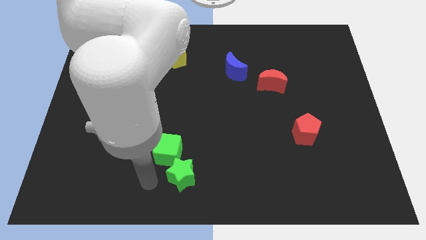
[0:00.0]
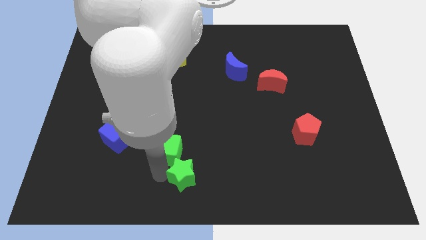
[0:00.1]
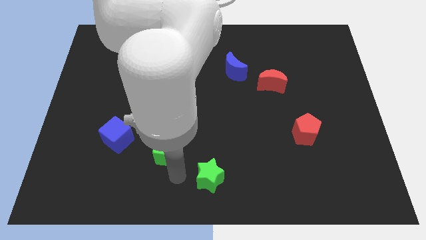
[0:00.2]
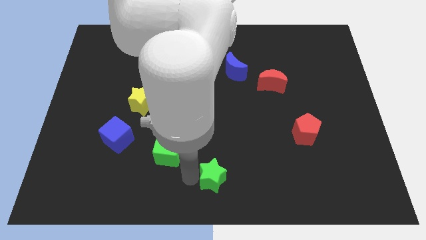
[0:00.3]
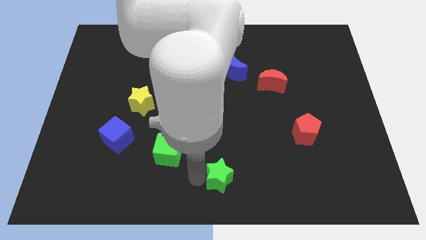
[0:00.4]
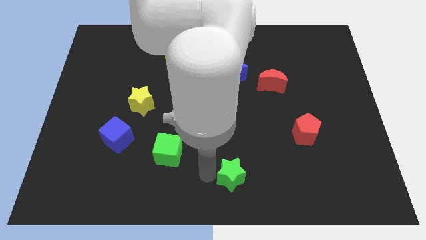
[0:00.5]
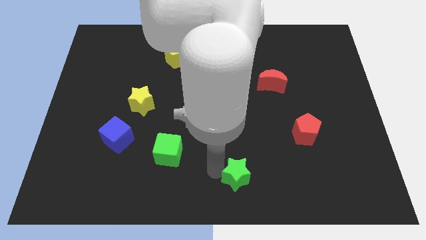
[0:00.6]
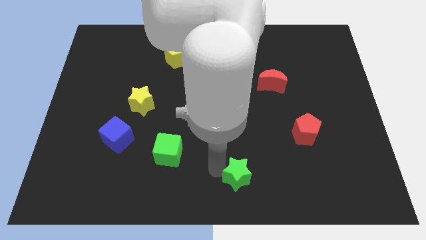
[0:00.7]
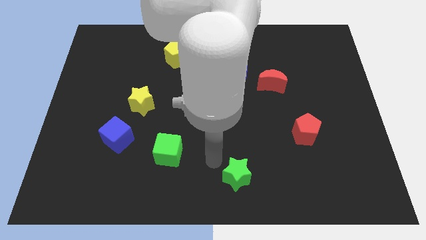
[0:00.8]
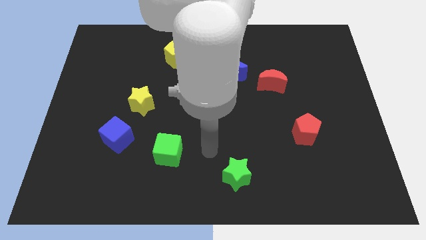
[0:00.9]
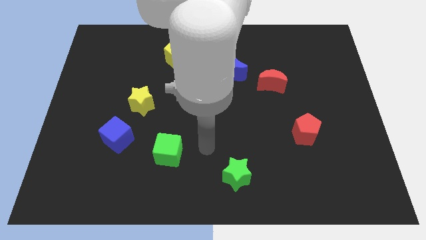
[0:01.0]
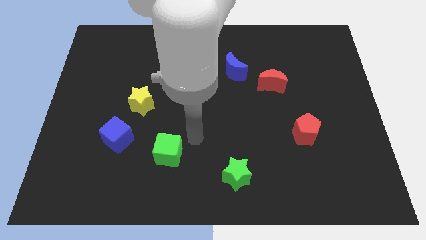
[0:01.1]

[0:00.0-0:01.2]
push the green star to the right of the board

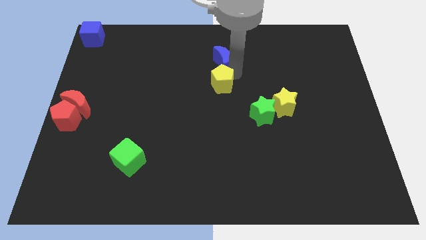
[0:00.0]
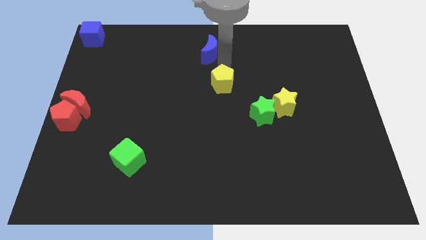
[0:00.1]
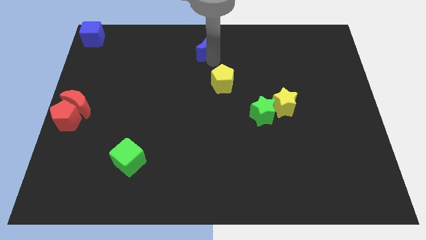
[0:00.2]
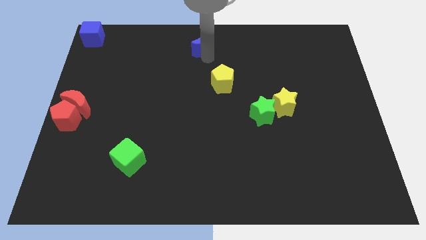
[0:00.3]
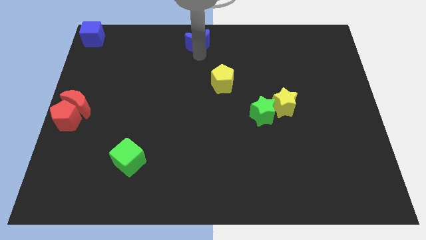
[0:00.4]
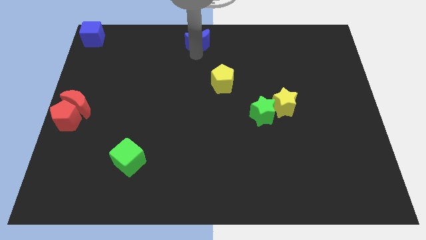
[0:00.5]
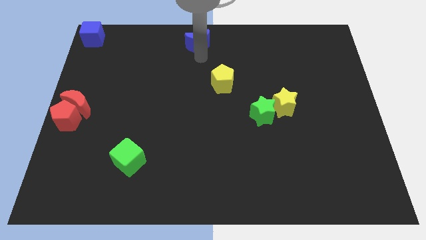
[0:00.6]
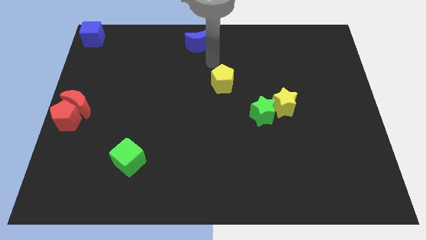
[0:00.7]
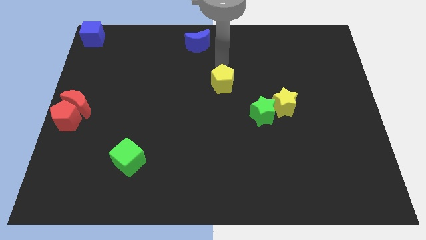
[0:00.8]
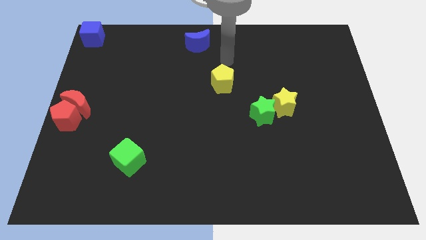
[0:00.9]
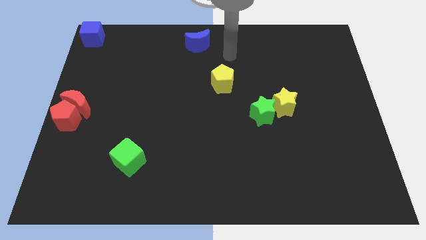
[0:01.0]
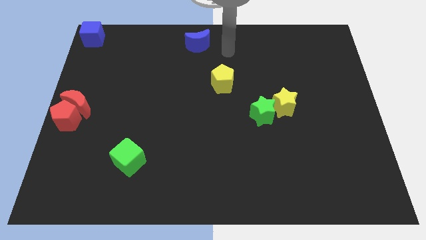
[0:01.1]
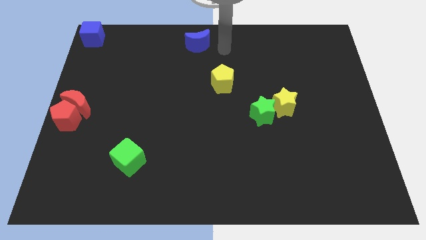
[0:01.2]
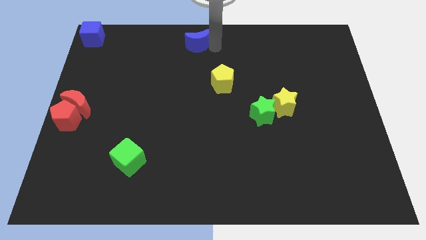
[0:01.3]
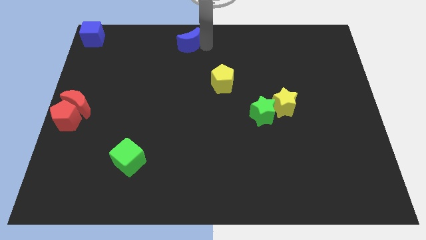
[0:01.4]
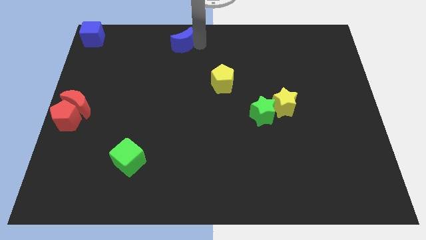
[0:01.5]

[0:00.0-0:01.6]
slide the blue moon to the top center

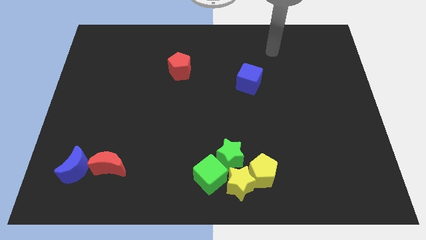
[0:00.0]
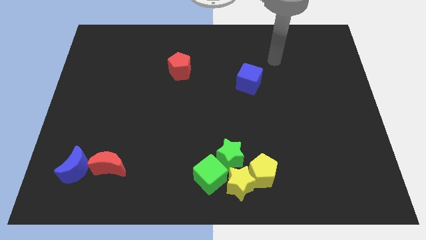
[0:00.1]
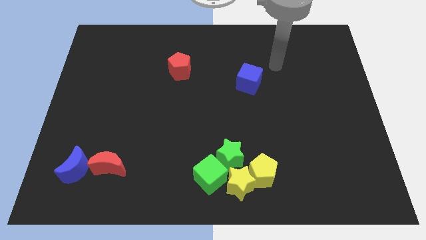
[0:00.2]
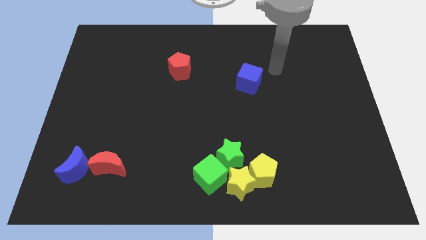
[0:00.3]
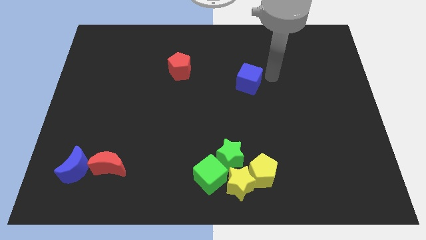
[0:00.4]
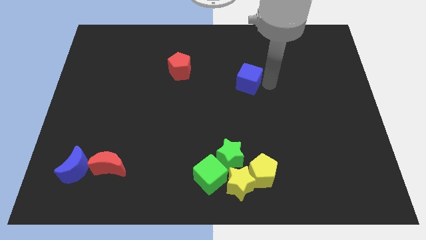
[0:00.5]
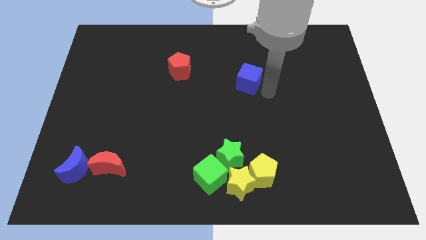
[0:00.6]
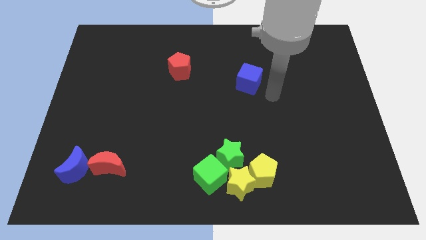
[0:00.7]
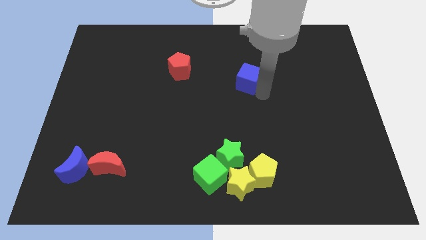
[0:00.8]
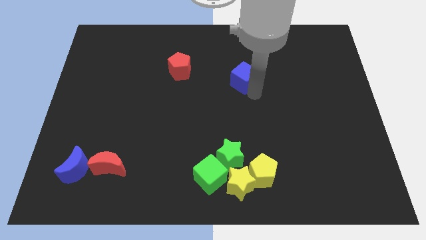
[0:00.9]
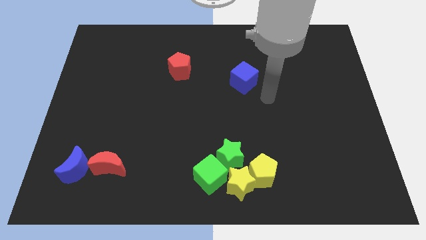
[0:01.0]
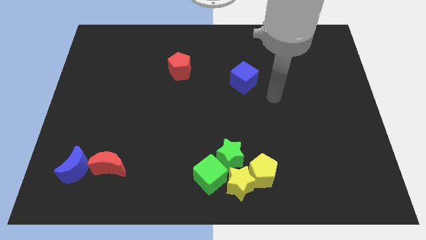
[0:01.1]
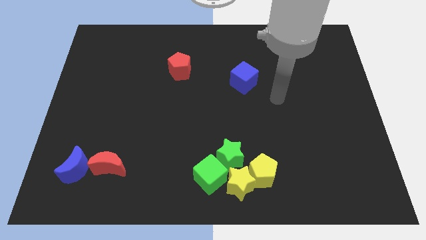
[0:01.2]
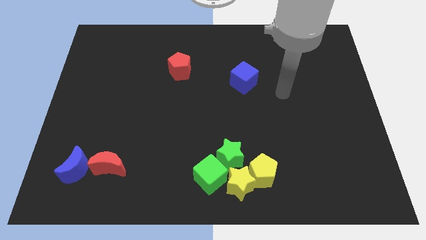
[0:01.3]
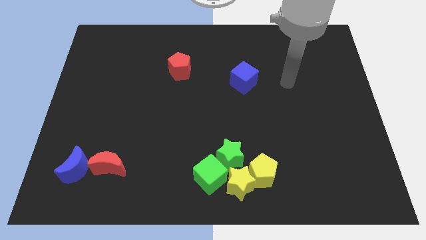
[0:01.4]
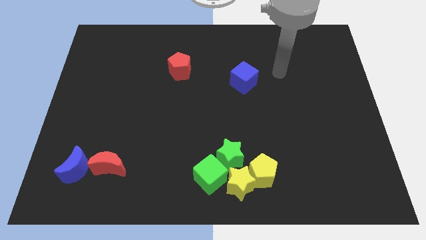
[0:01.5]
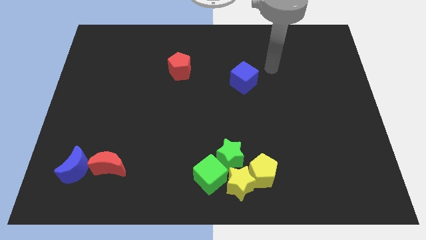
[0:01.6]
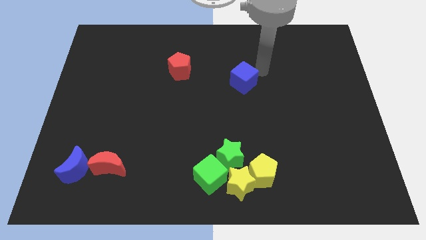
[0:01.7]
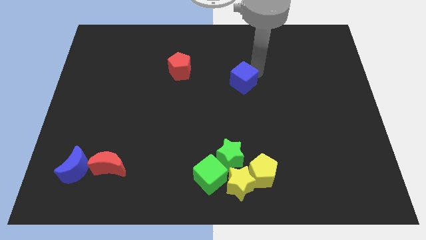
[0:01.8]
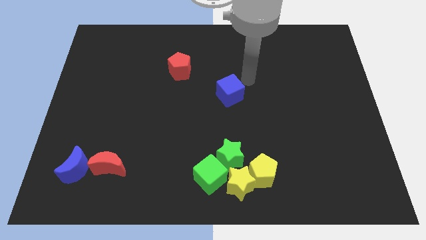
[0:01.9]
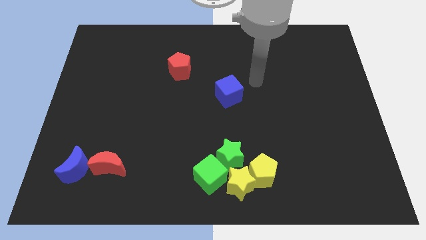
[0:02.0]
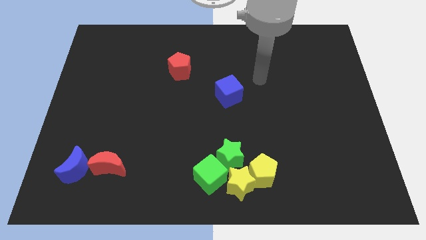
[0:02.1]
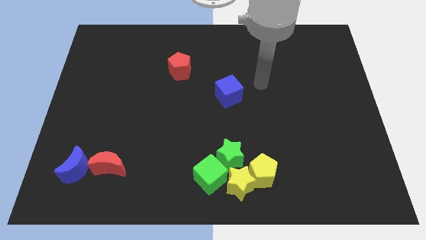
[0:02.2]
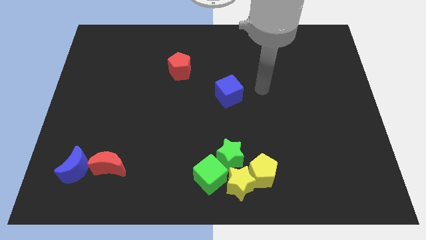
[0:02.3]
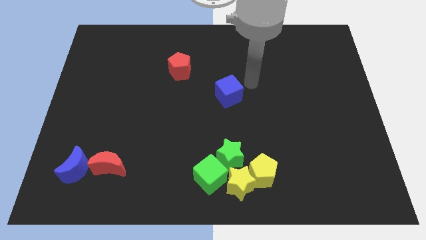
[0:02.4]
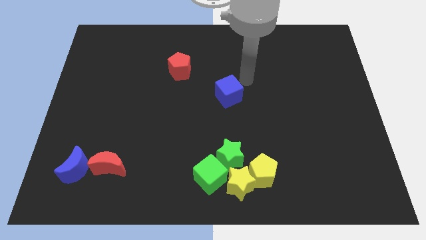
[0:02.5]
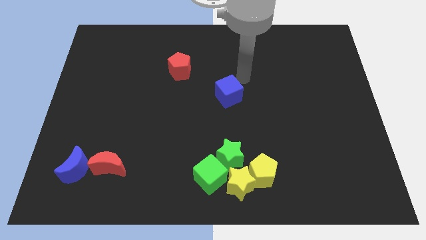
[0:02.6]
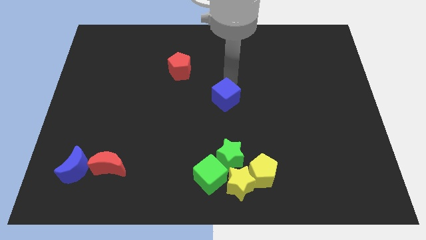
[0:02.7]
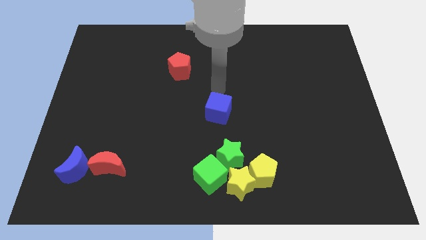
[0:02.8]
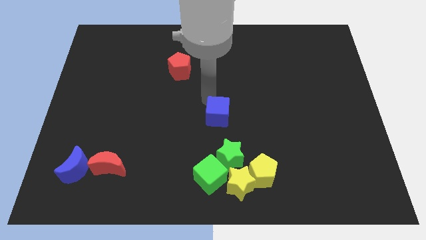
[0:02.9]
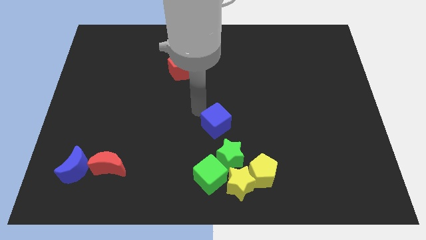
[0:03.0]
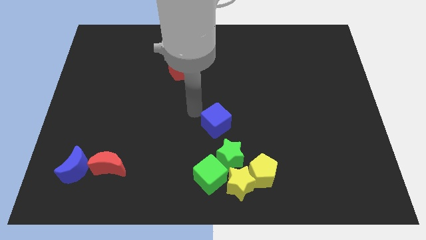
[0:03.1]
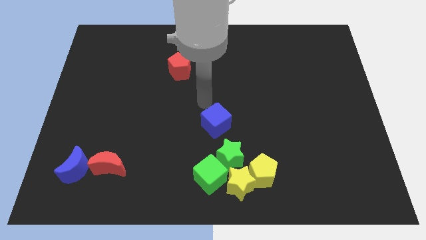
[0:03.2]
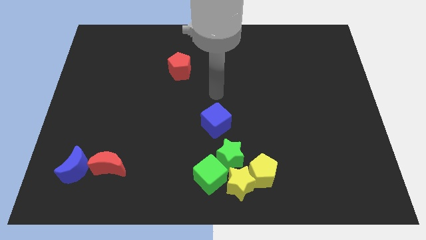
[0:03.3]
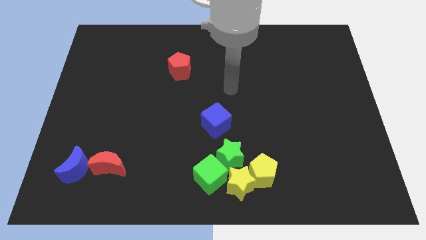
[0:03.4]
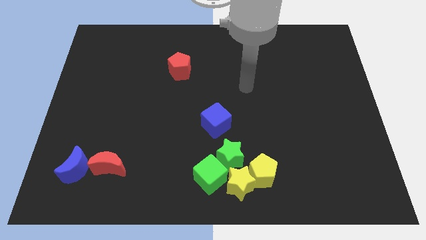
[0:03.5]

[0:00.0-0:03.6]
push the blue cube towards the bottom side of the board

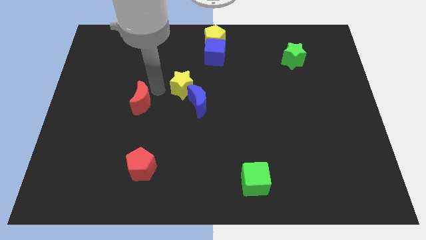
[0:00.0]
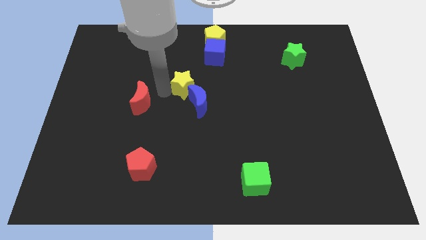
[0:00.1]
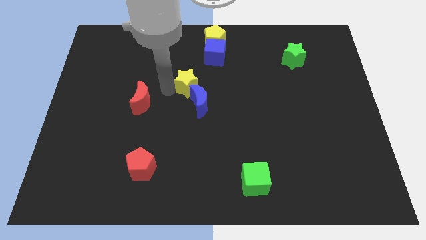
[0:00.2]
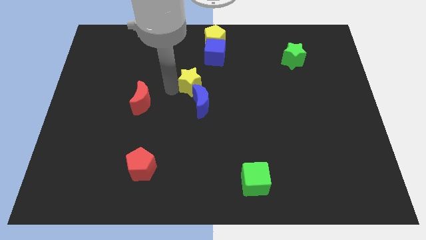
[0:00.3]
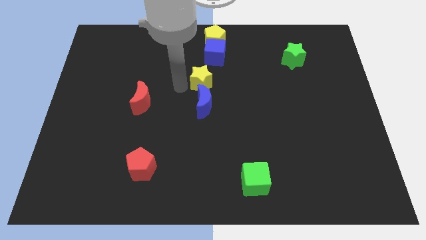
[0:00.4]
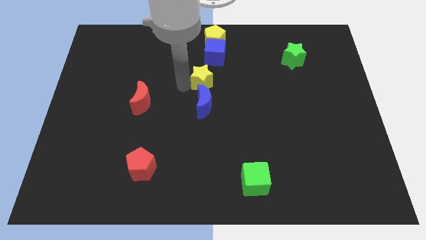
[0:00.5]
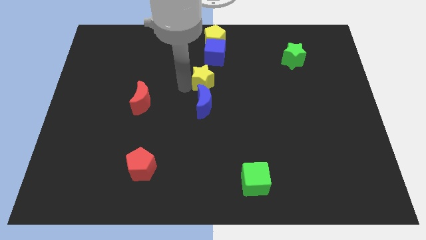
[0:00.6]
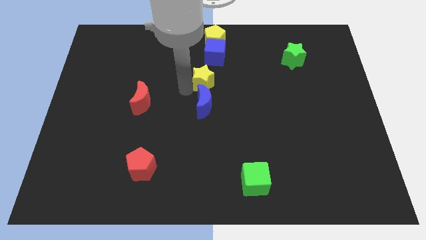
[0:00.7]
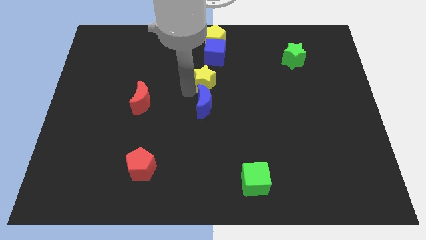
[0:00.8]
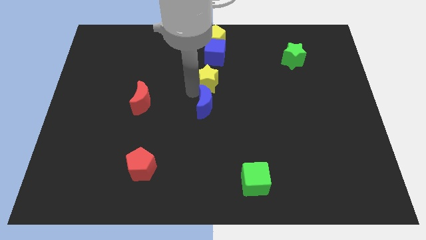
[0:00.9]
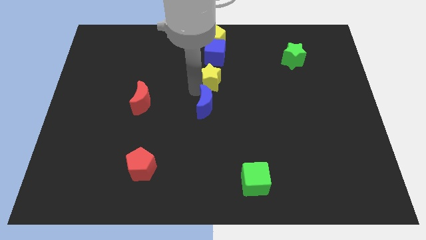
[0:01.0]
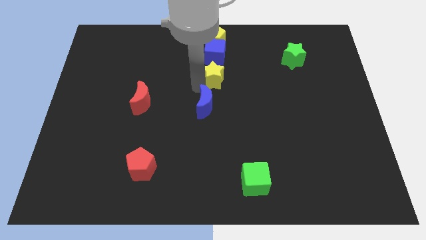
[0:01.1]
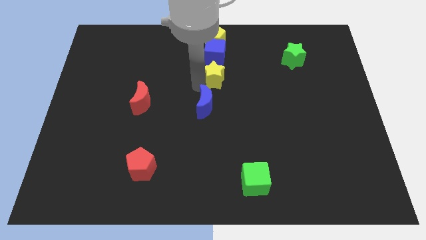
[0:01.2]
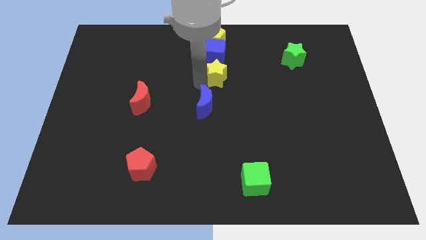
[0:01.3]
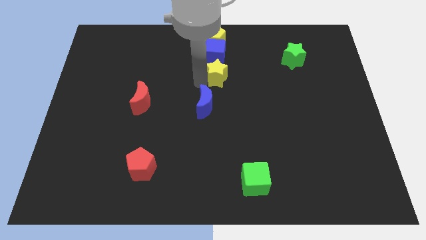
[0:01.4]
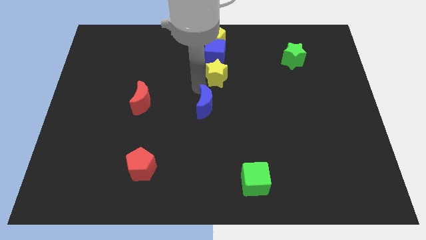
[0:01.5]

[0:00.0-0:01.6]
push the yellow star below the blue cube

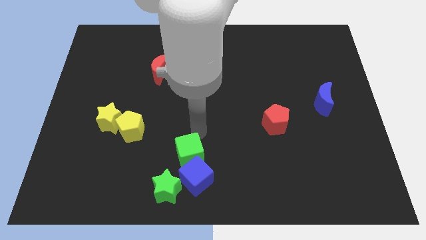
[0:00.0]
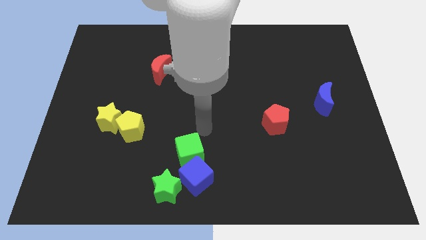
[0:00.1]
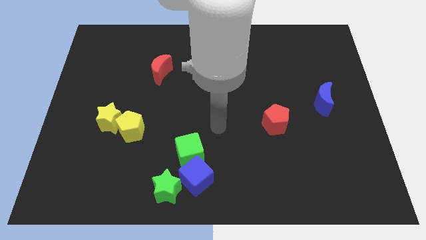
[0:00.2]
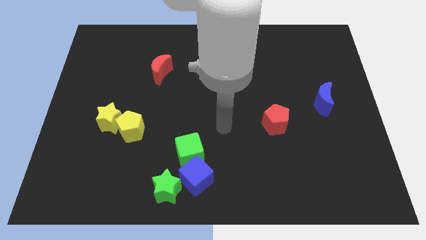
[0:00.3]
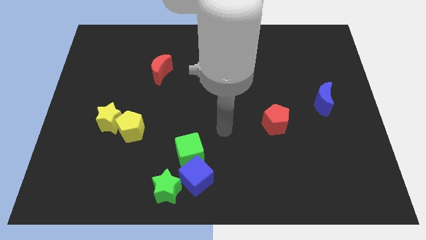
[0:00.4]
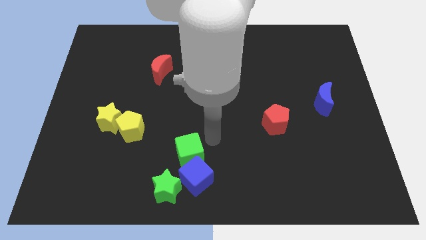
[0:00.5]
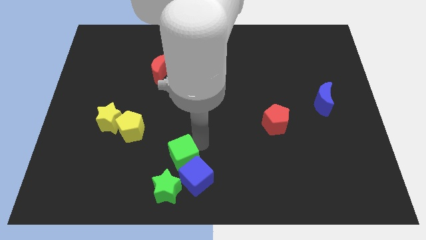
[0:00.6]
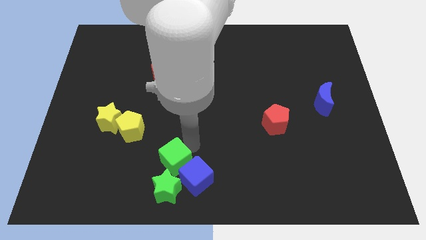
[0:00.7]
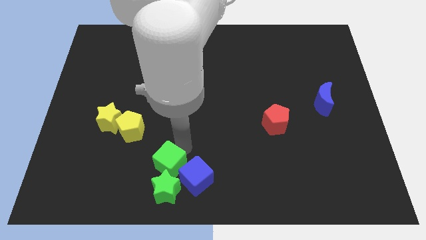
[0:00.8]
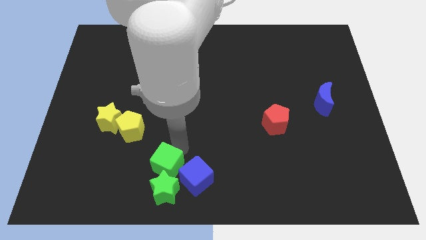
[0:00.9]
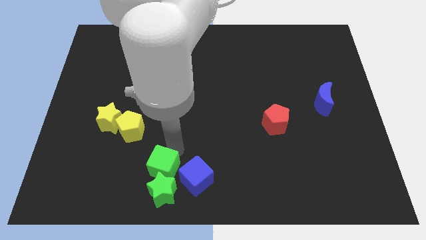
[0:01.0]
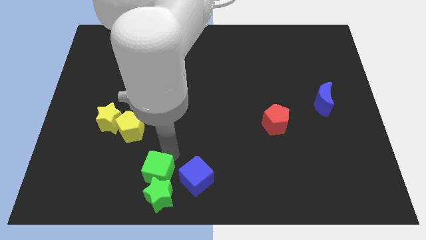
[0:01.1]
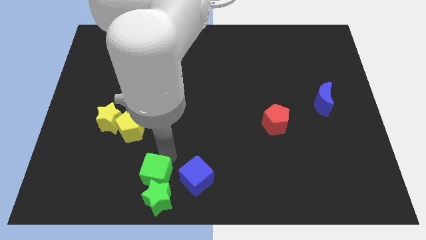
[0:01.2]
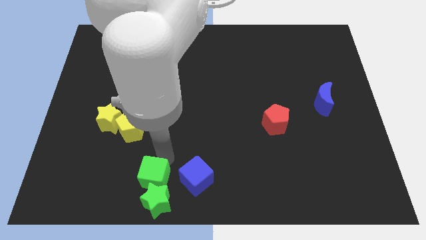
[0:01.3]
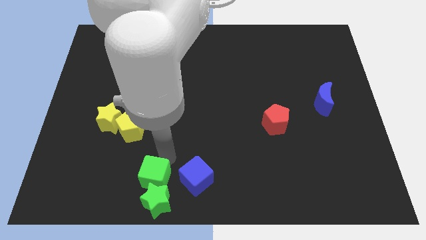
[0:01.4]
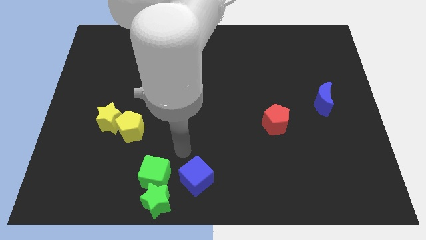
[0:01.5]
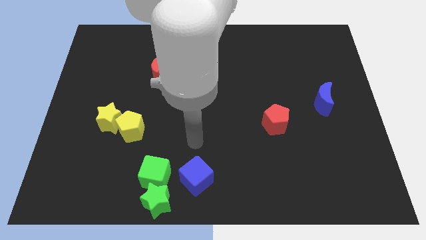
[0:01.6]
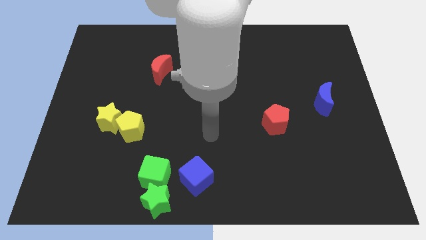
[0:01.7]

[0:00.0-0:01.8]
push the green cube into the green star
